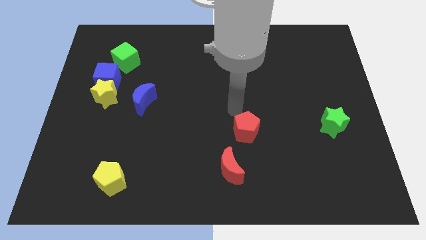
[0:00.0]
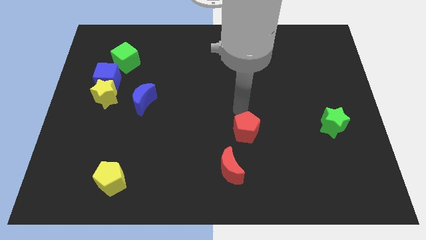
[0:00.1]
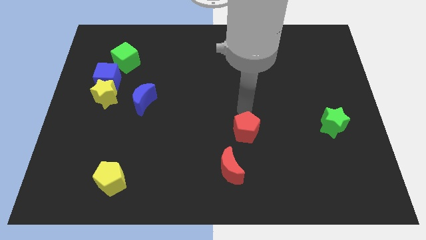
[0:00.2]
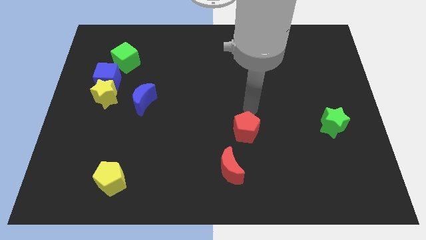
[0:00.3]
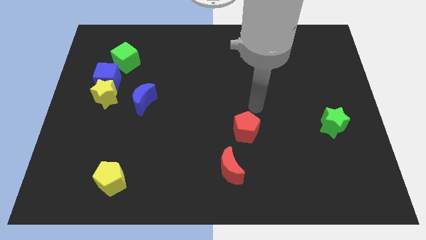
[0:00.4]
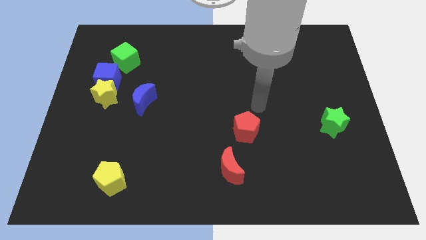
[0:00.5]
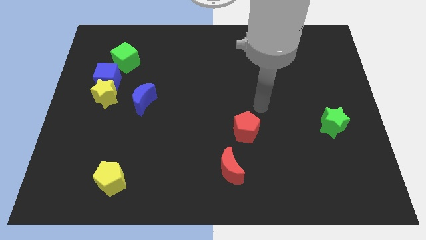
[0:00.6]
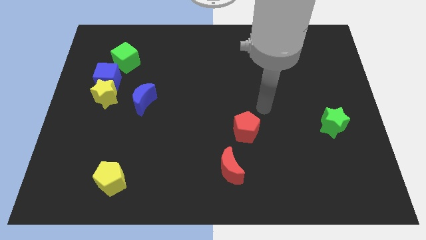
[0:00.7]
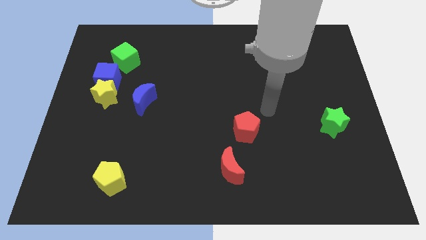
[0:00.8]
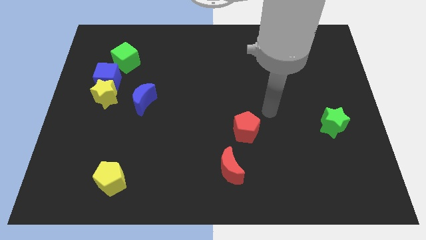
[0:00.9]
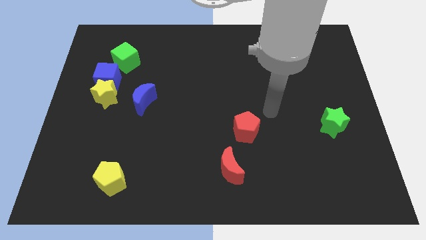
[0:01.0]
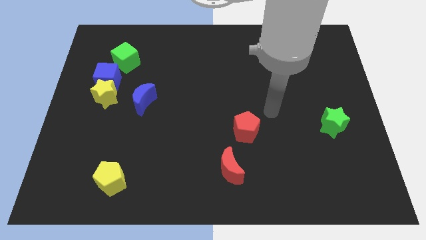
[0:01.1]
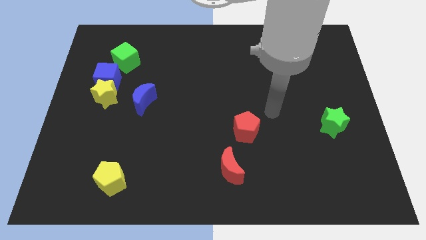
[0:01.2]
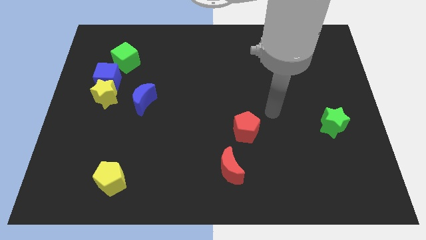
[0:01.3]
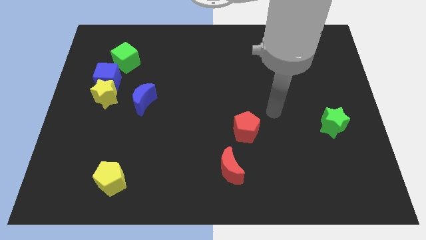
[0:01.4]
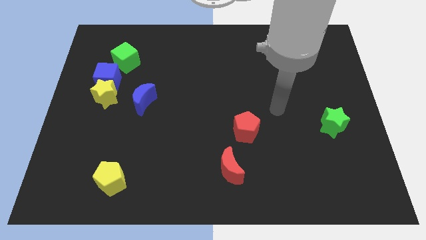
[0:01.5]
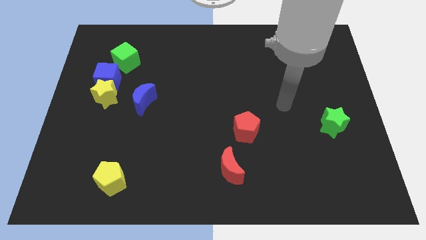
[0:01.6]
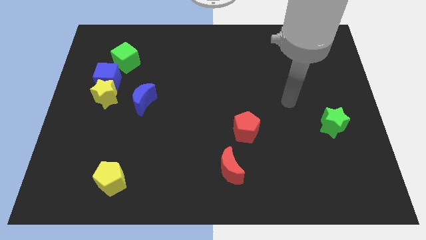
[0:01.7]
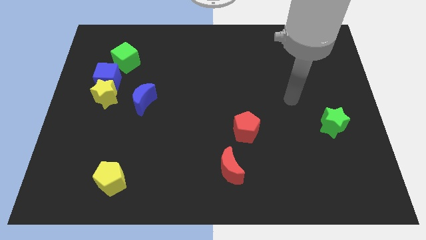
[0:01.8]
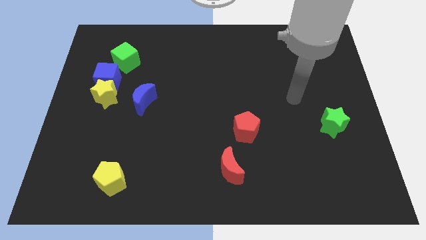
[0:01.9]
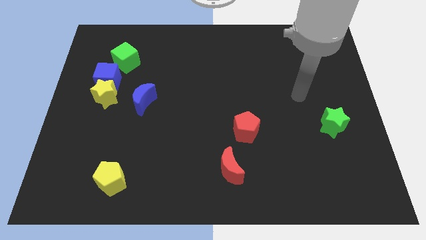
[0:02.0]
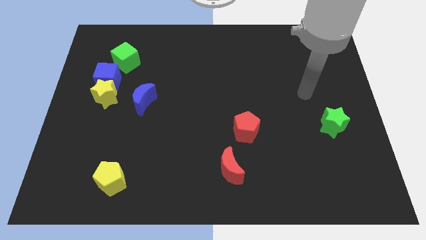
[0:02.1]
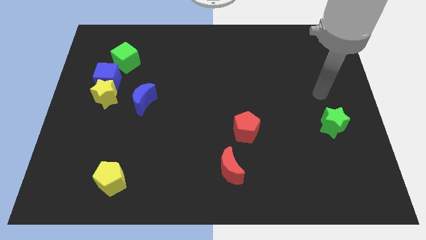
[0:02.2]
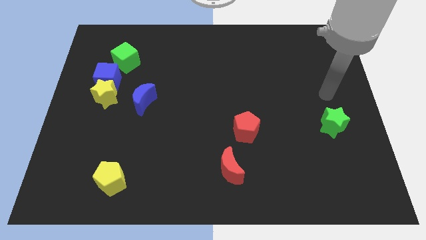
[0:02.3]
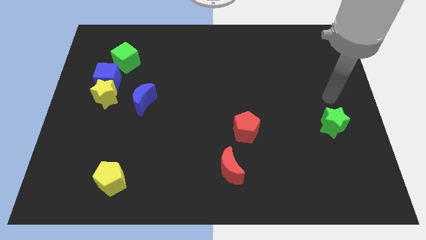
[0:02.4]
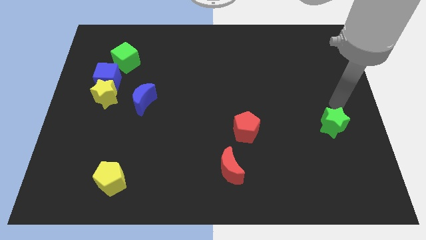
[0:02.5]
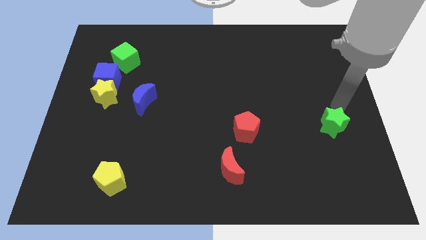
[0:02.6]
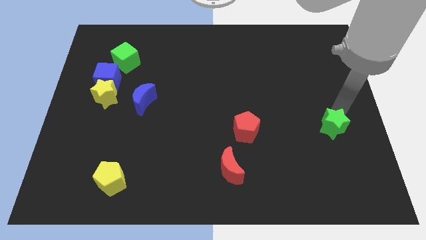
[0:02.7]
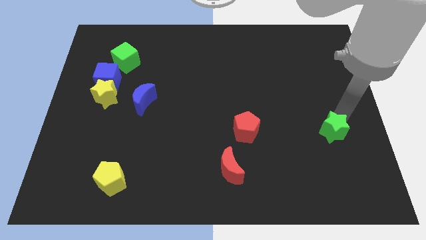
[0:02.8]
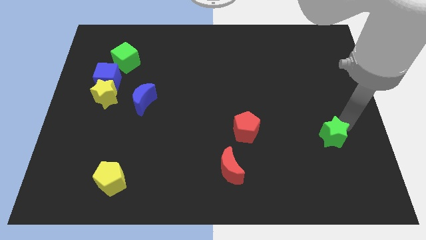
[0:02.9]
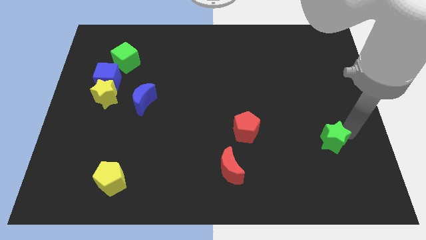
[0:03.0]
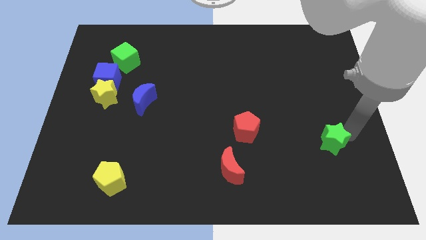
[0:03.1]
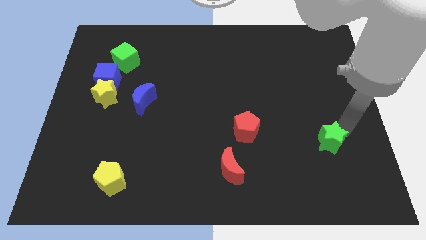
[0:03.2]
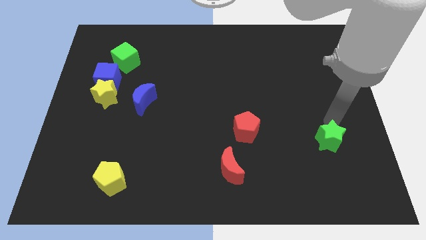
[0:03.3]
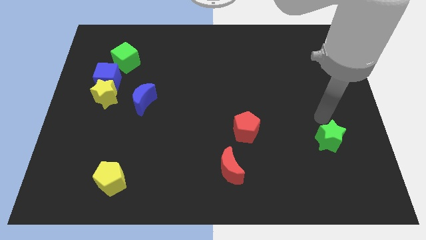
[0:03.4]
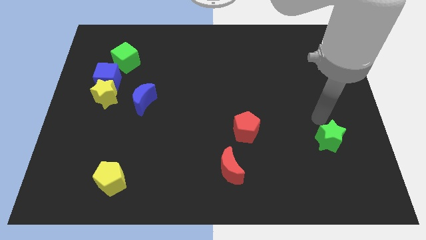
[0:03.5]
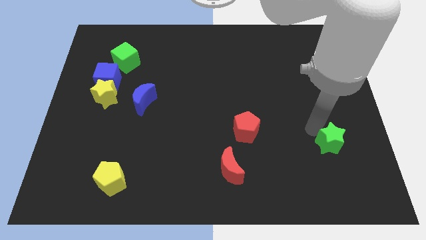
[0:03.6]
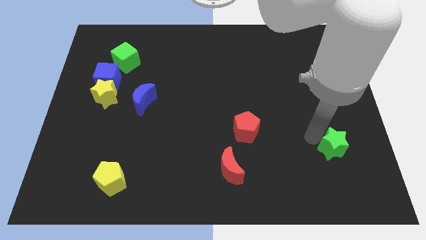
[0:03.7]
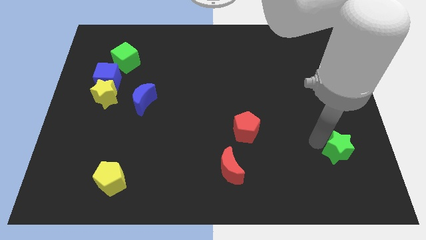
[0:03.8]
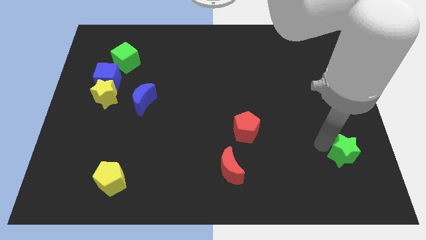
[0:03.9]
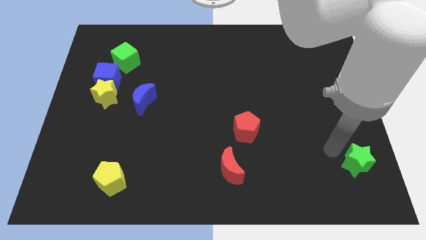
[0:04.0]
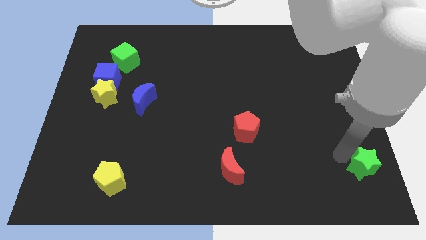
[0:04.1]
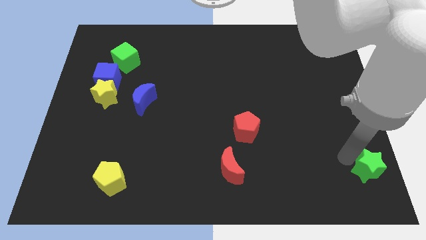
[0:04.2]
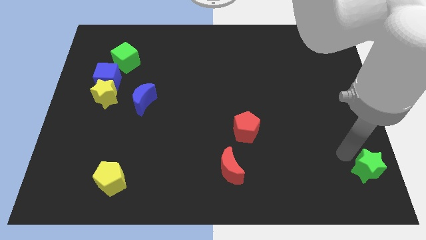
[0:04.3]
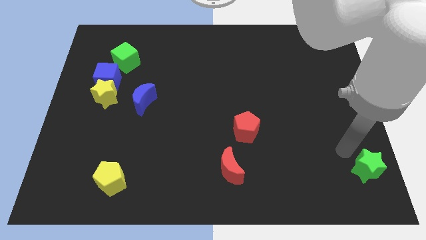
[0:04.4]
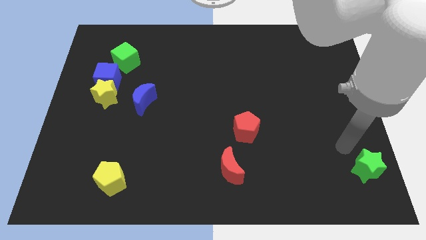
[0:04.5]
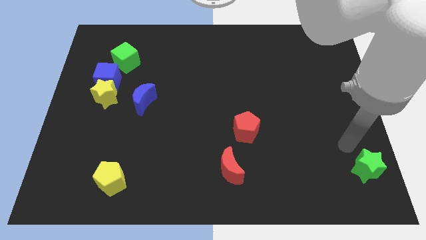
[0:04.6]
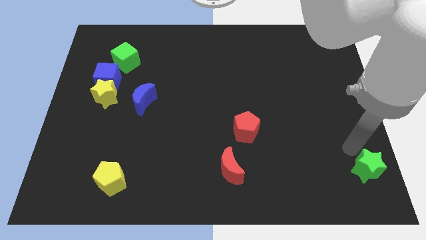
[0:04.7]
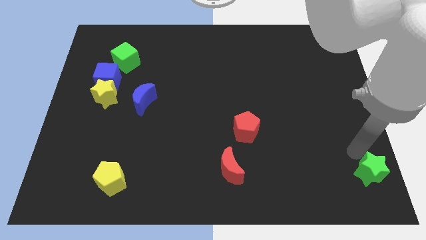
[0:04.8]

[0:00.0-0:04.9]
place the green star to the right of the red crescent

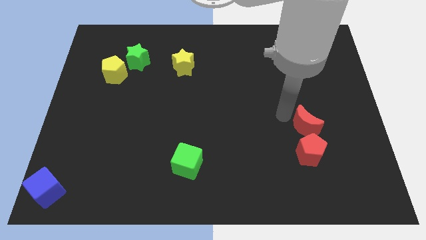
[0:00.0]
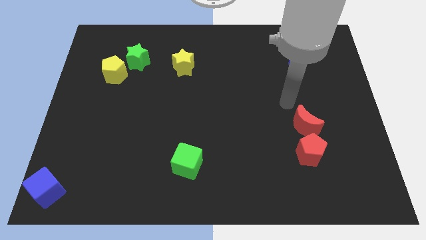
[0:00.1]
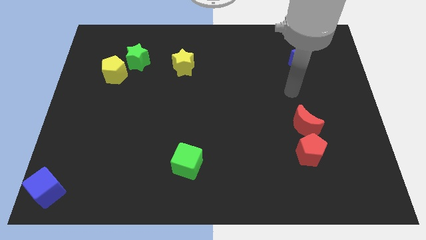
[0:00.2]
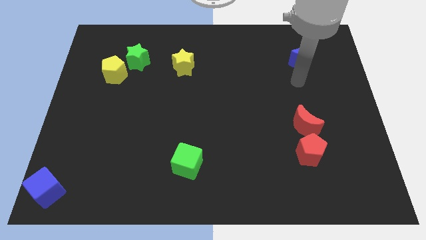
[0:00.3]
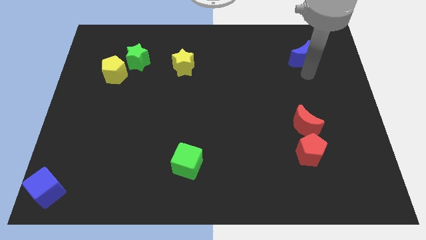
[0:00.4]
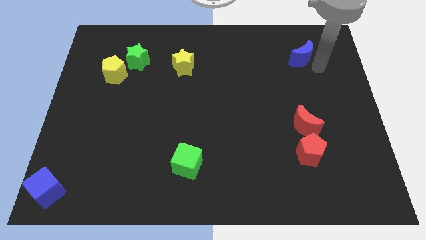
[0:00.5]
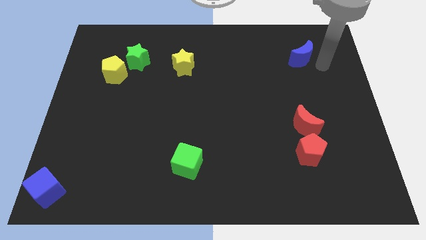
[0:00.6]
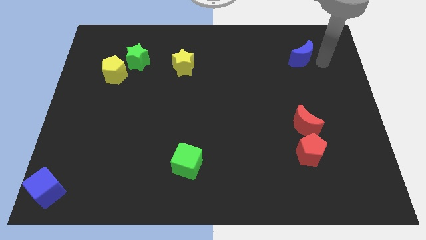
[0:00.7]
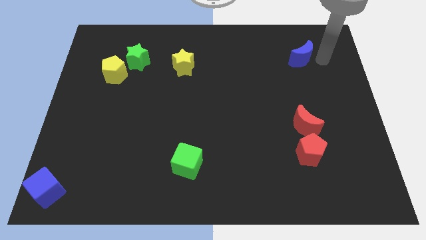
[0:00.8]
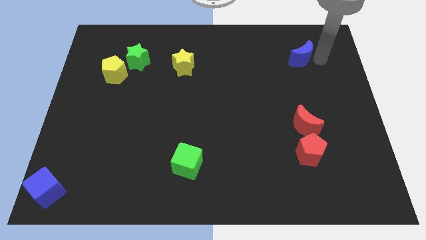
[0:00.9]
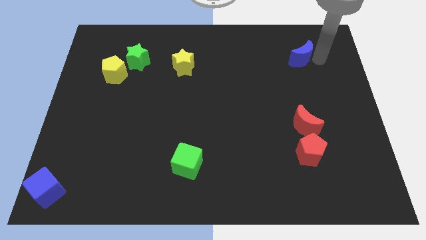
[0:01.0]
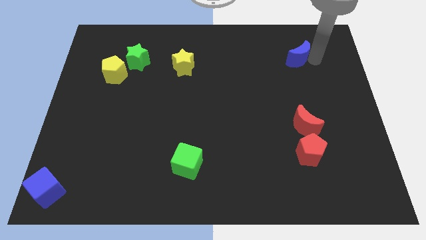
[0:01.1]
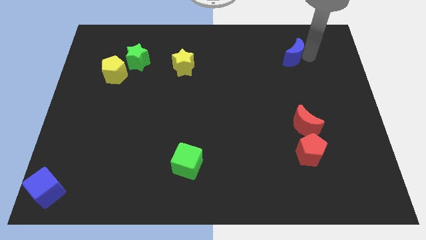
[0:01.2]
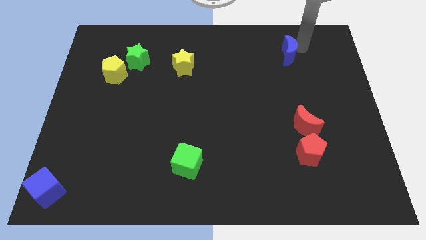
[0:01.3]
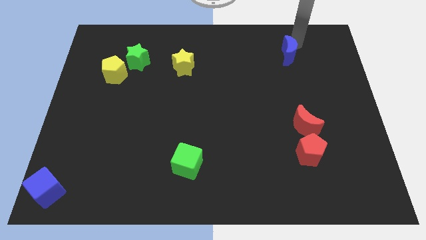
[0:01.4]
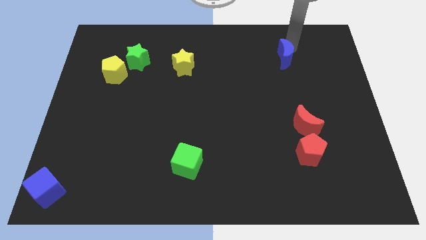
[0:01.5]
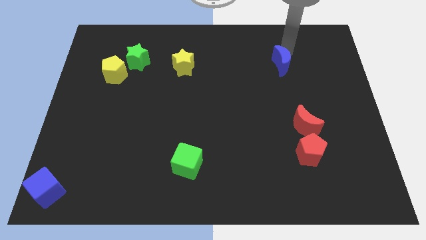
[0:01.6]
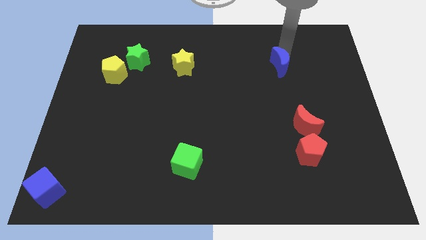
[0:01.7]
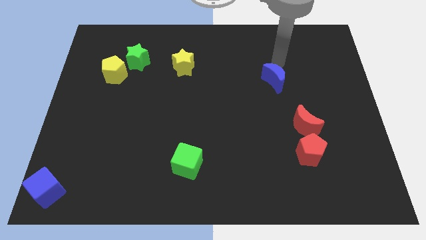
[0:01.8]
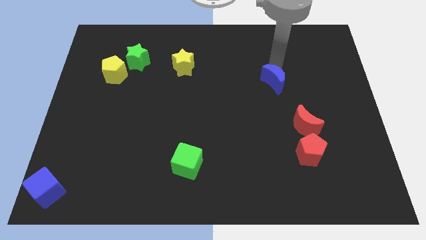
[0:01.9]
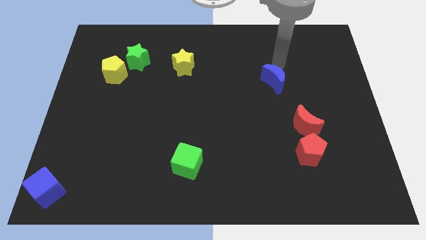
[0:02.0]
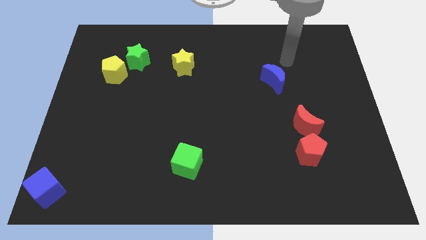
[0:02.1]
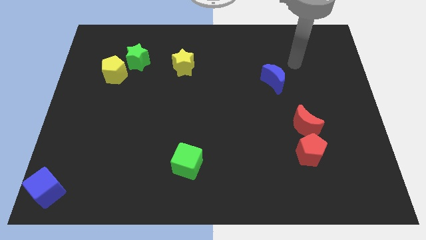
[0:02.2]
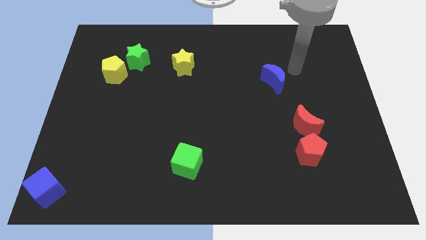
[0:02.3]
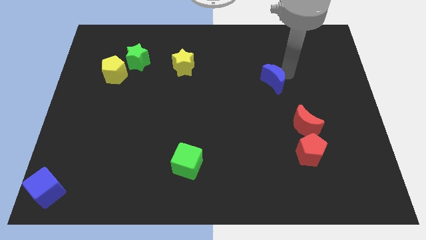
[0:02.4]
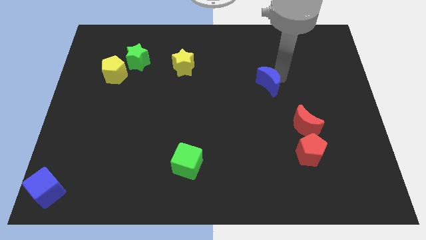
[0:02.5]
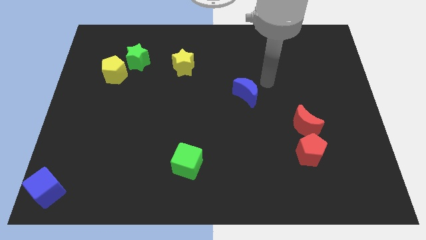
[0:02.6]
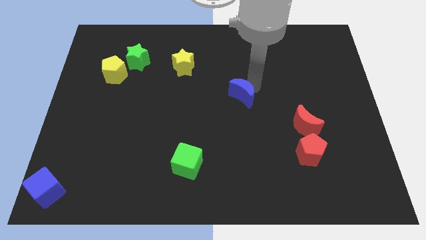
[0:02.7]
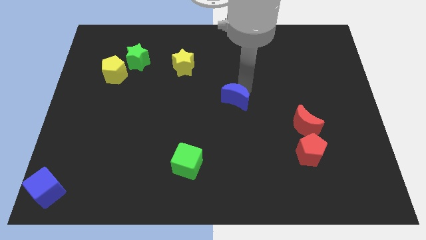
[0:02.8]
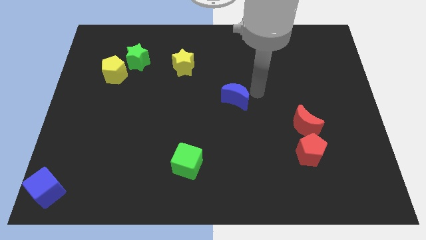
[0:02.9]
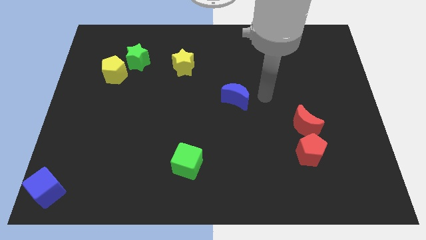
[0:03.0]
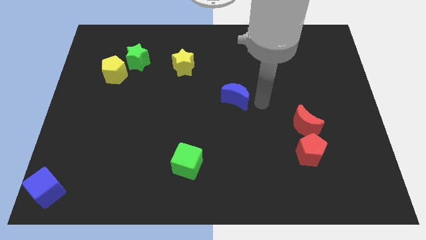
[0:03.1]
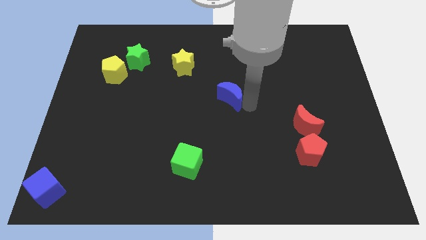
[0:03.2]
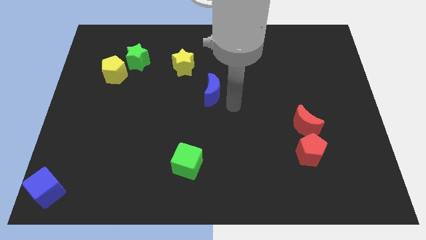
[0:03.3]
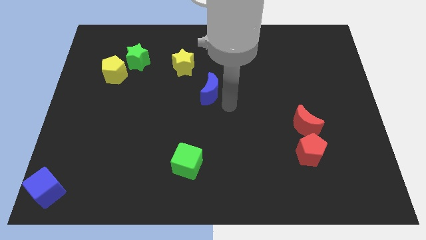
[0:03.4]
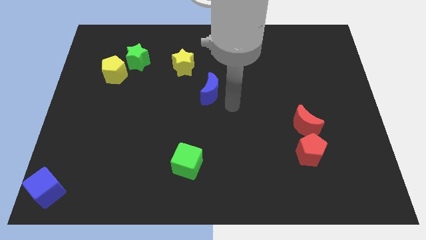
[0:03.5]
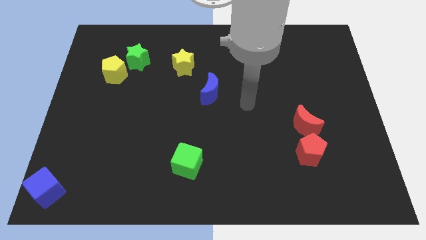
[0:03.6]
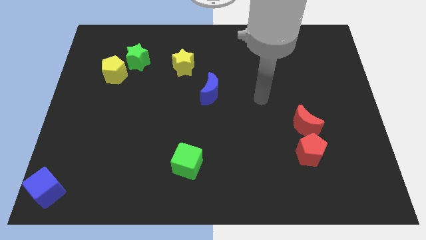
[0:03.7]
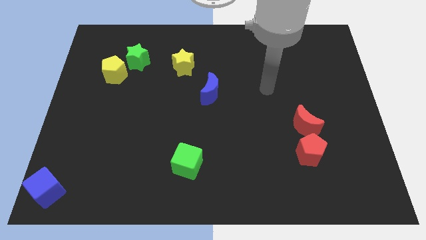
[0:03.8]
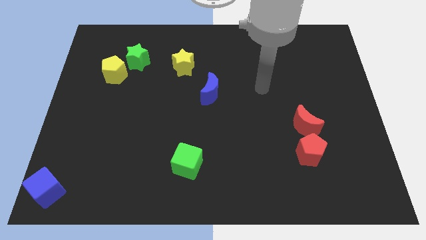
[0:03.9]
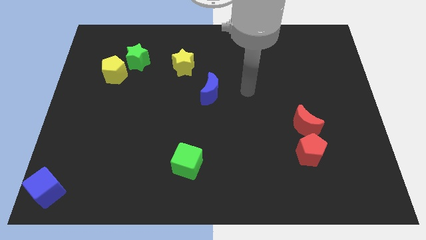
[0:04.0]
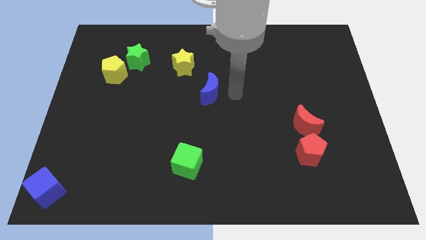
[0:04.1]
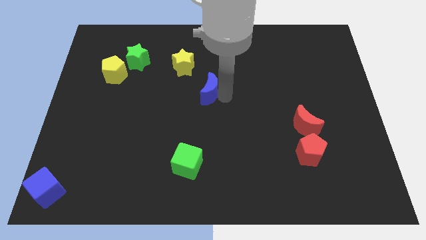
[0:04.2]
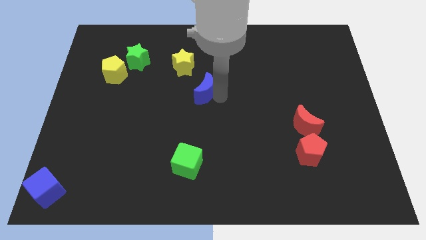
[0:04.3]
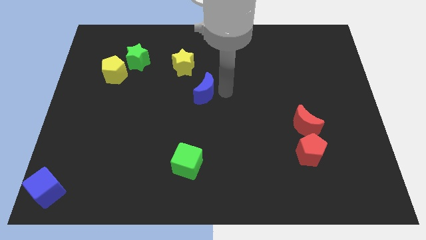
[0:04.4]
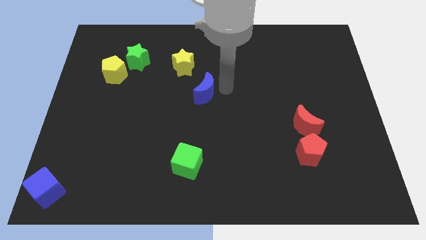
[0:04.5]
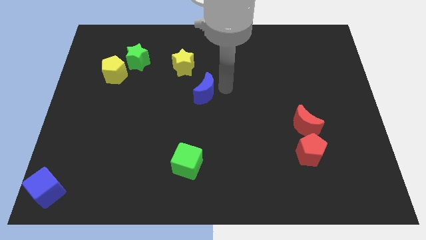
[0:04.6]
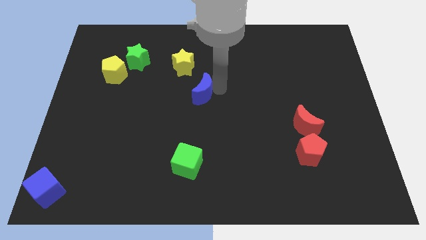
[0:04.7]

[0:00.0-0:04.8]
move the blue crescent to the center of the board
